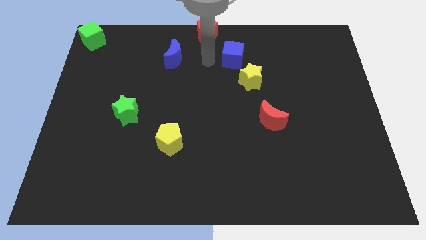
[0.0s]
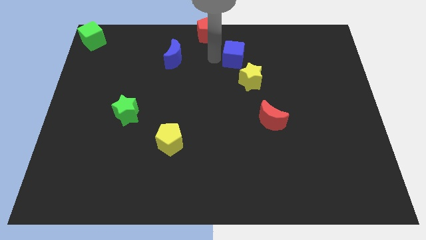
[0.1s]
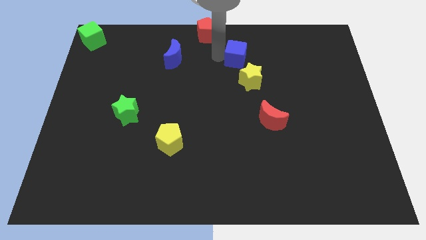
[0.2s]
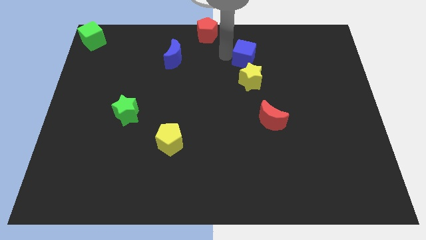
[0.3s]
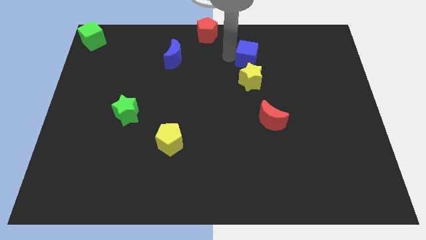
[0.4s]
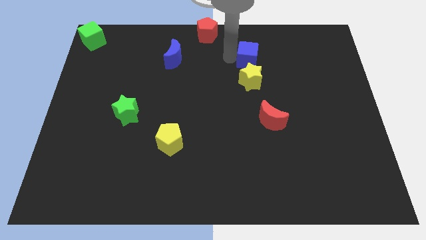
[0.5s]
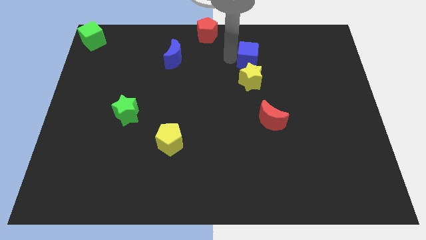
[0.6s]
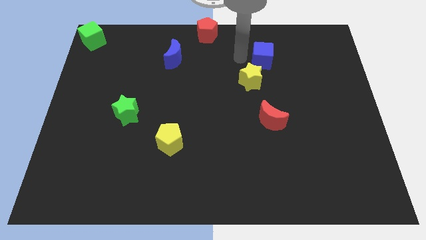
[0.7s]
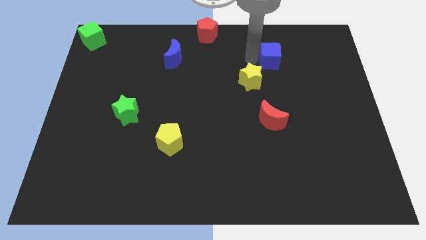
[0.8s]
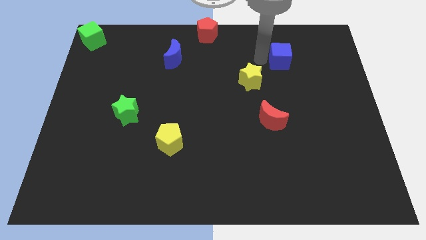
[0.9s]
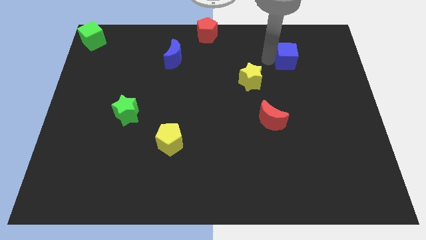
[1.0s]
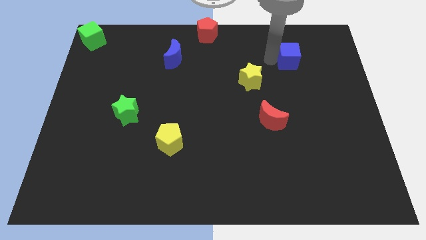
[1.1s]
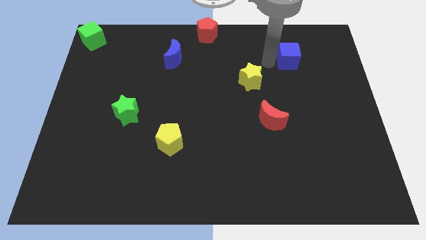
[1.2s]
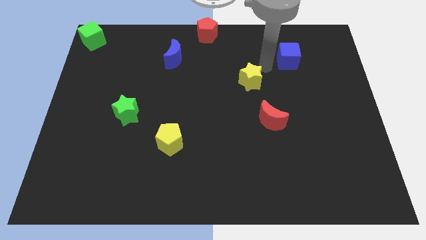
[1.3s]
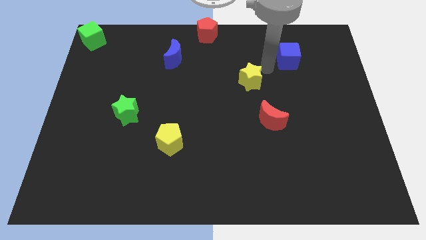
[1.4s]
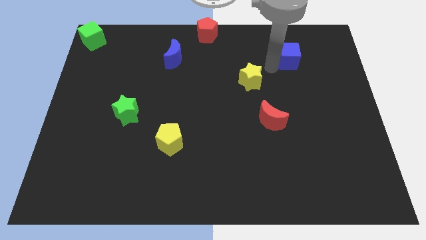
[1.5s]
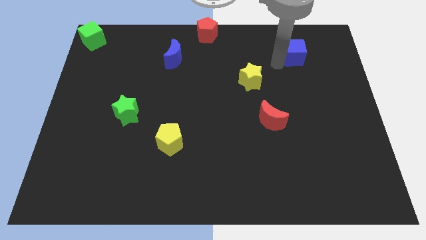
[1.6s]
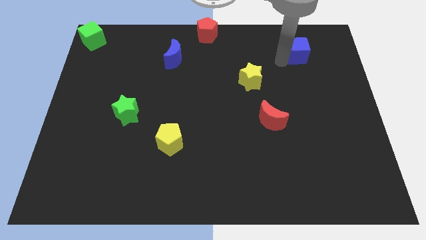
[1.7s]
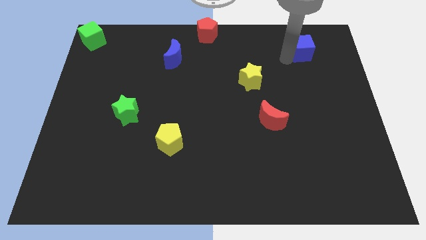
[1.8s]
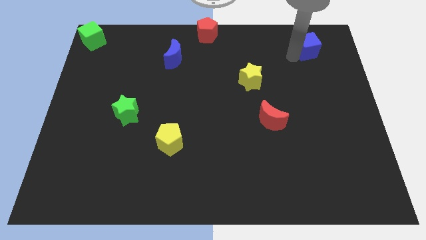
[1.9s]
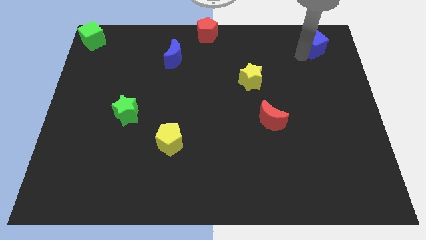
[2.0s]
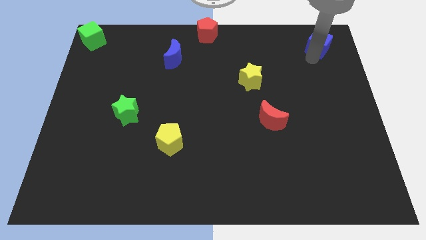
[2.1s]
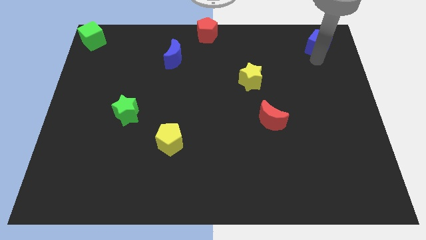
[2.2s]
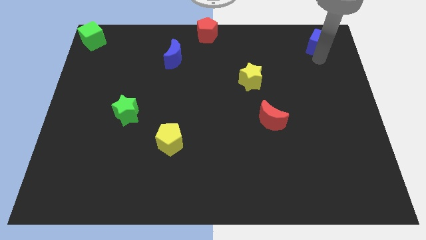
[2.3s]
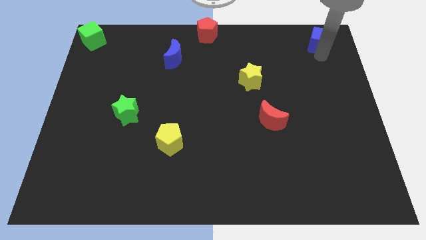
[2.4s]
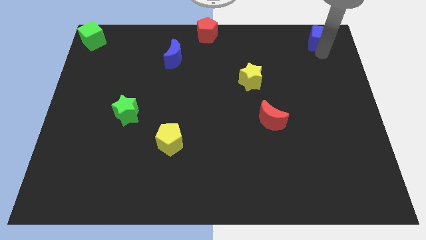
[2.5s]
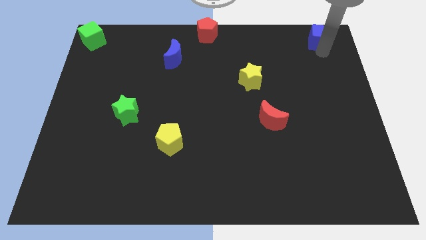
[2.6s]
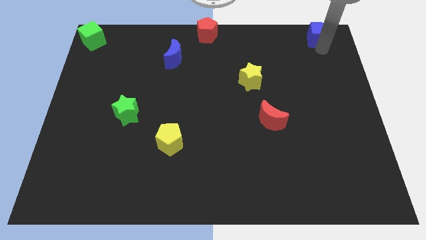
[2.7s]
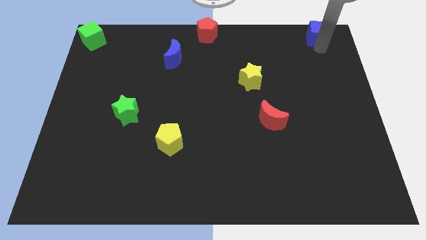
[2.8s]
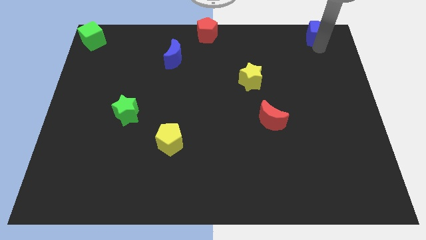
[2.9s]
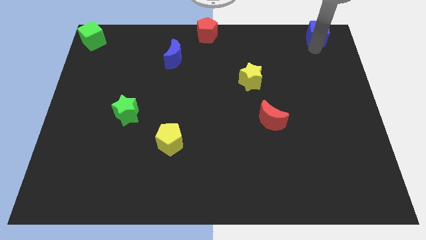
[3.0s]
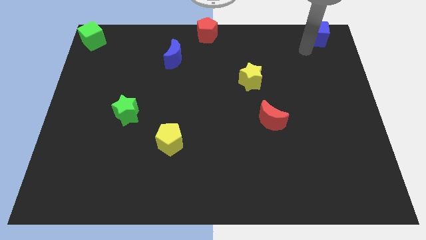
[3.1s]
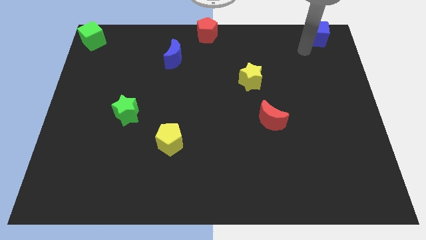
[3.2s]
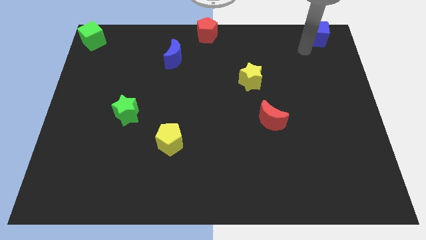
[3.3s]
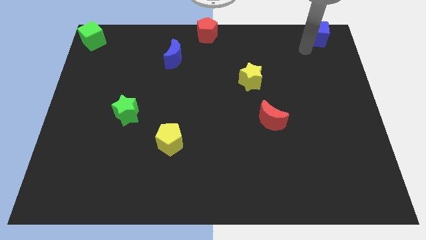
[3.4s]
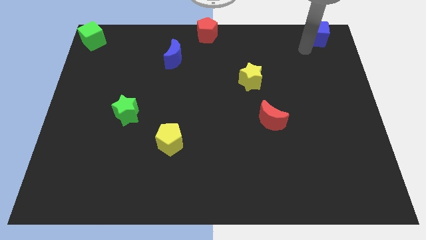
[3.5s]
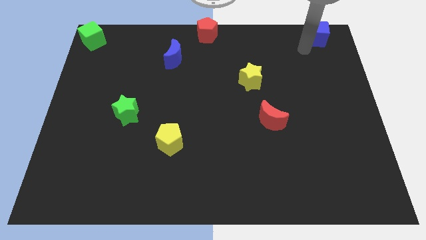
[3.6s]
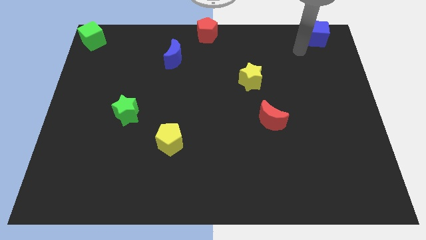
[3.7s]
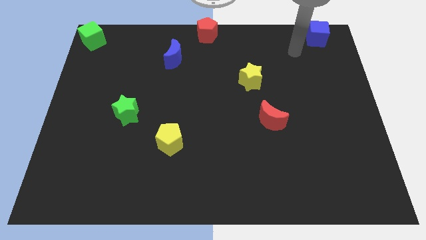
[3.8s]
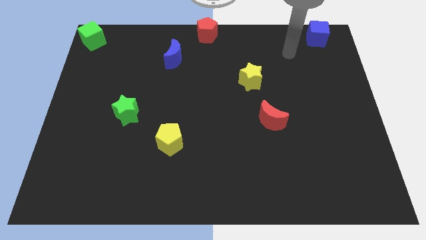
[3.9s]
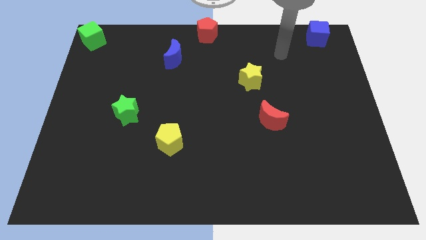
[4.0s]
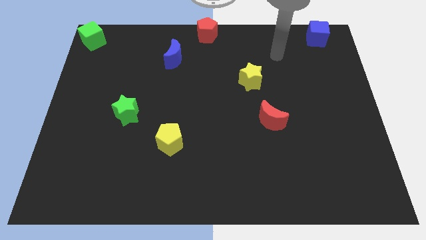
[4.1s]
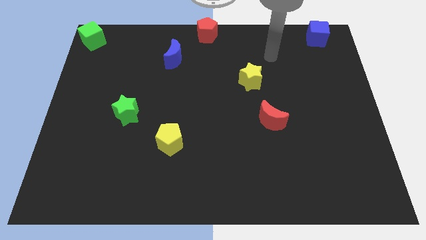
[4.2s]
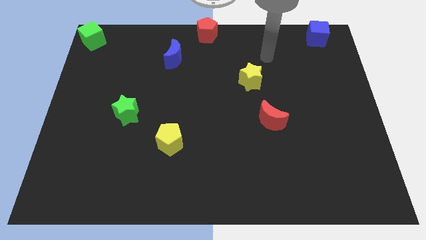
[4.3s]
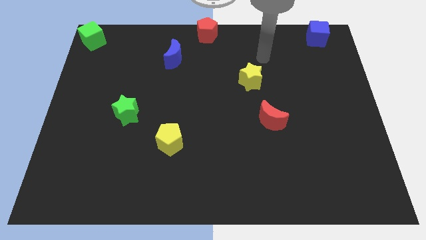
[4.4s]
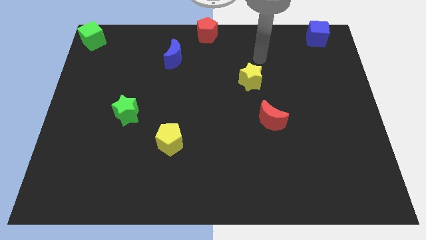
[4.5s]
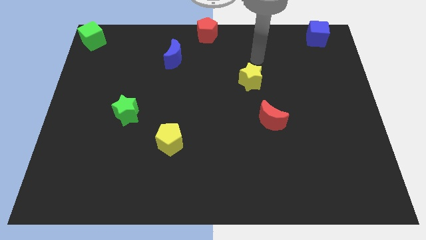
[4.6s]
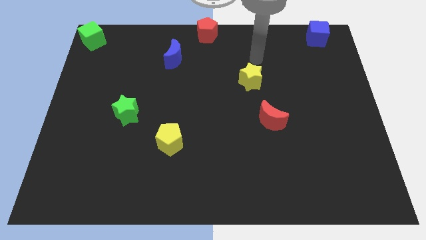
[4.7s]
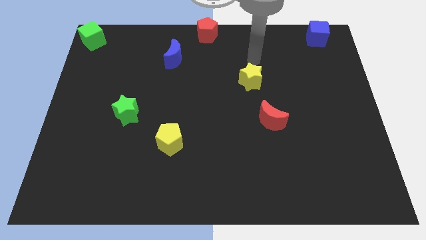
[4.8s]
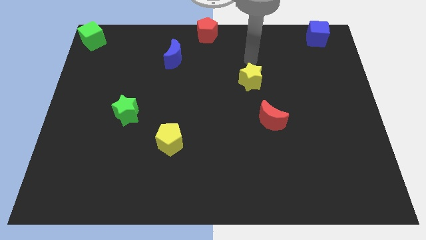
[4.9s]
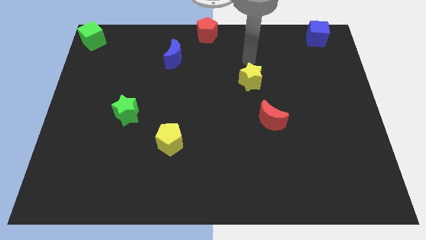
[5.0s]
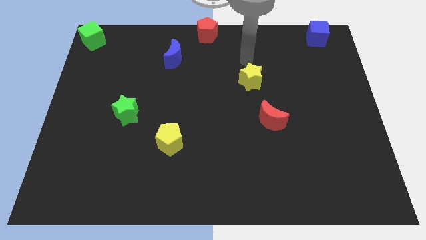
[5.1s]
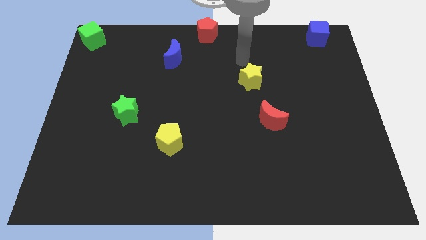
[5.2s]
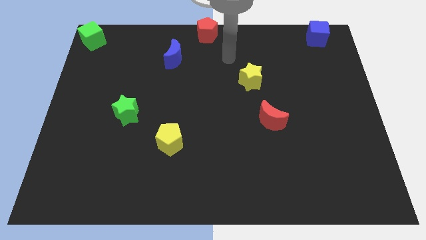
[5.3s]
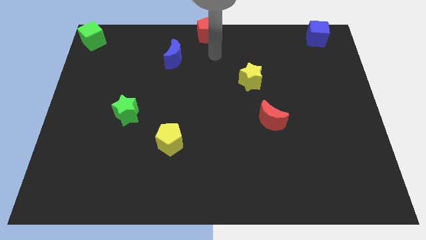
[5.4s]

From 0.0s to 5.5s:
push the blue cube to the top right corner of the board

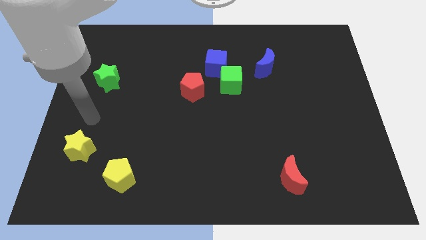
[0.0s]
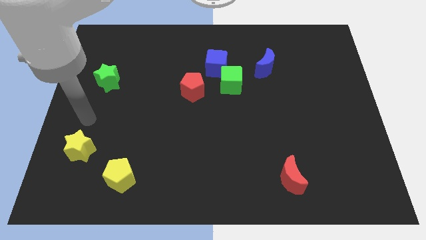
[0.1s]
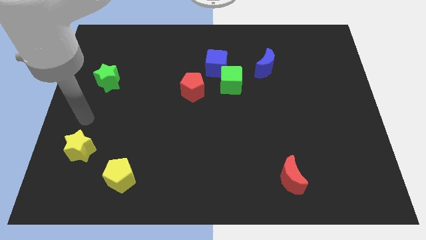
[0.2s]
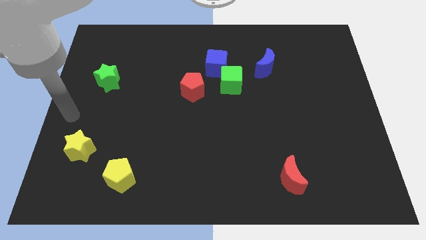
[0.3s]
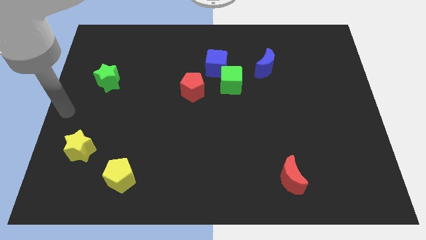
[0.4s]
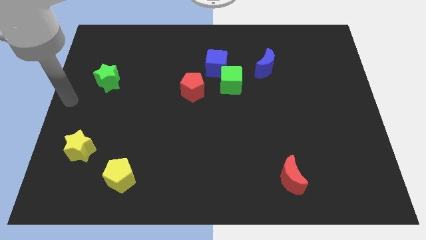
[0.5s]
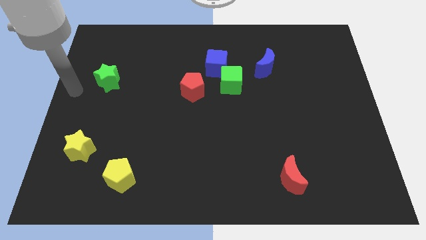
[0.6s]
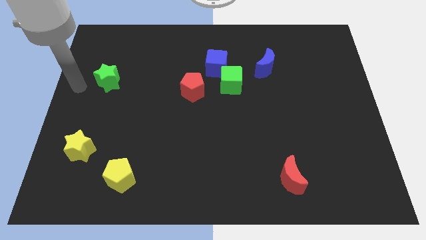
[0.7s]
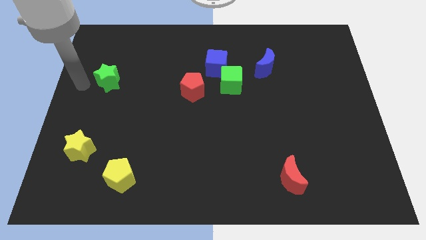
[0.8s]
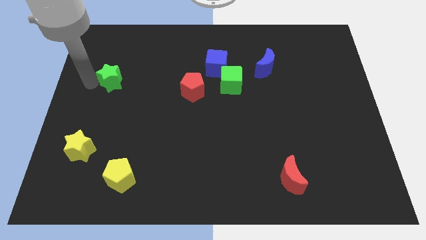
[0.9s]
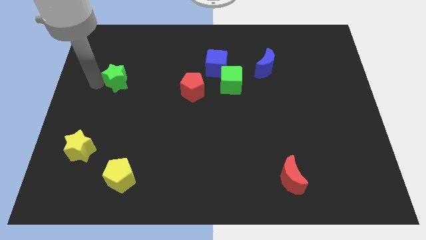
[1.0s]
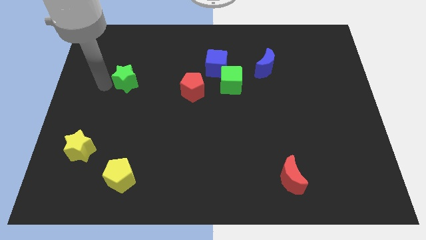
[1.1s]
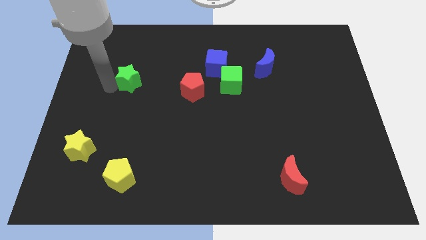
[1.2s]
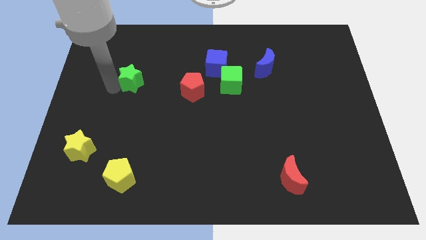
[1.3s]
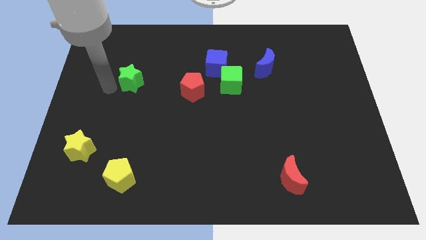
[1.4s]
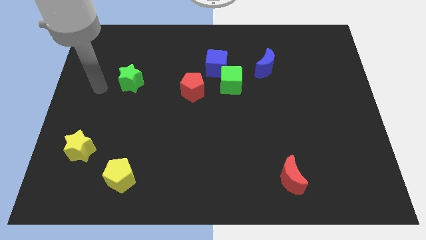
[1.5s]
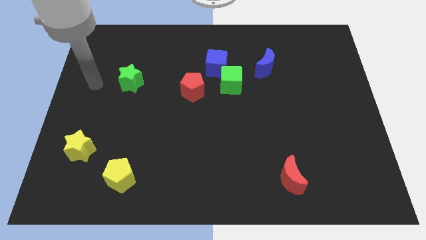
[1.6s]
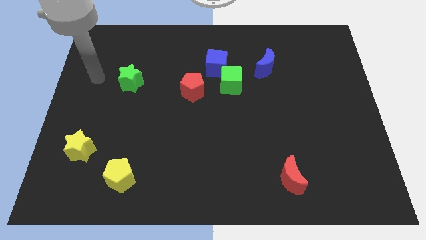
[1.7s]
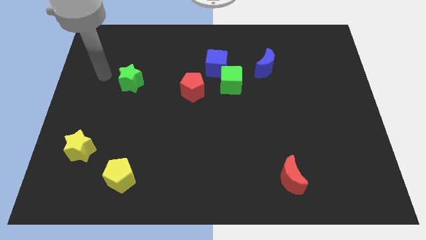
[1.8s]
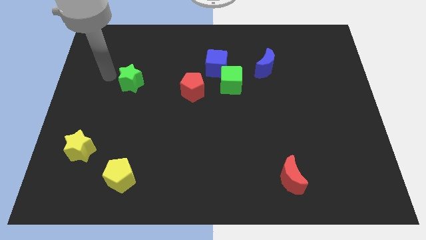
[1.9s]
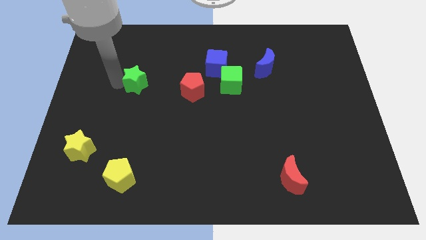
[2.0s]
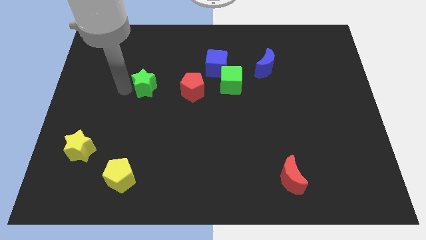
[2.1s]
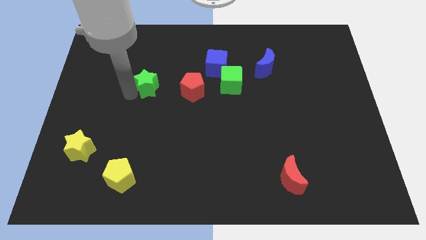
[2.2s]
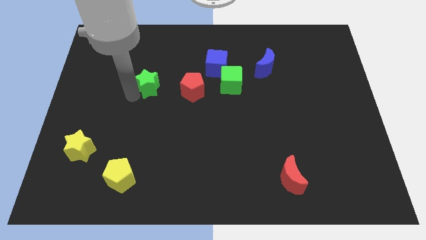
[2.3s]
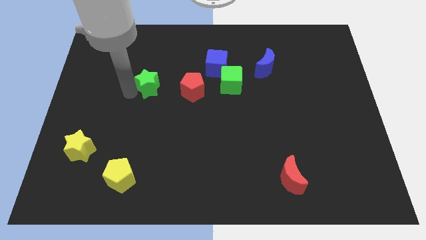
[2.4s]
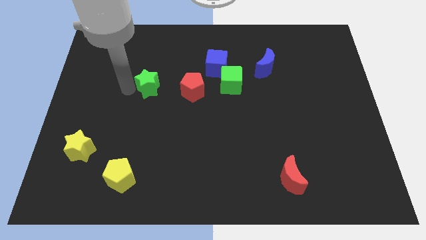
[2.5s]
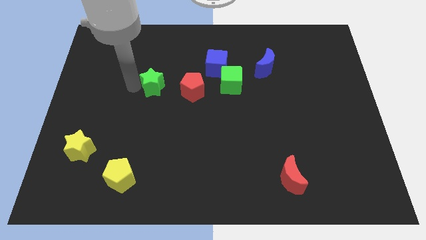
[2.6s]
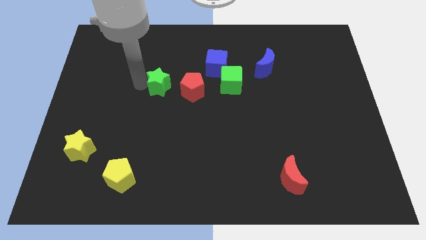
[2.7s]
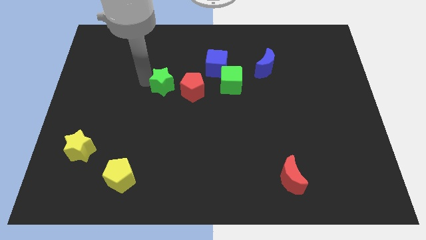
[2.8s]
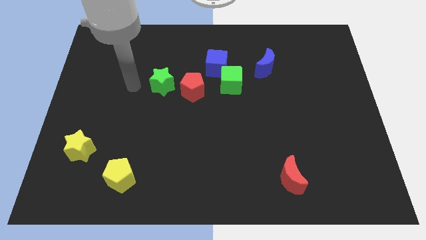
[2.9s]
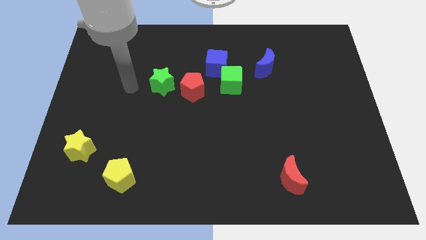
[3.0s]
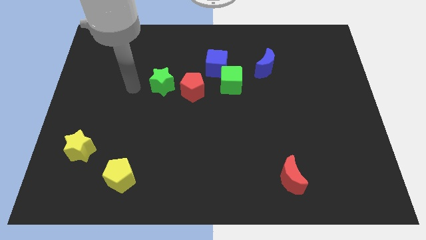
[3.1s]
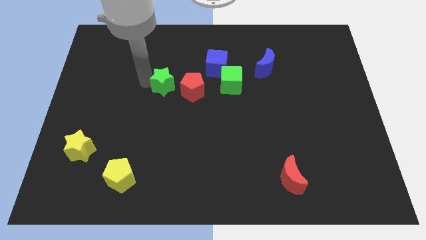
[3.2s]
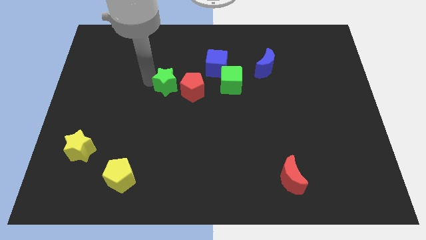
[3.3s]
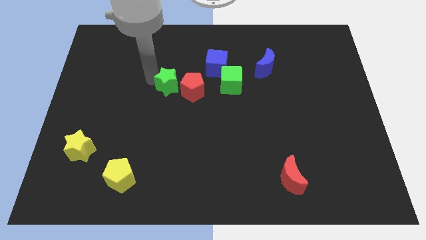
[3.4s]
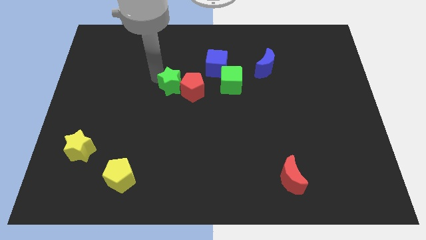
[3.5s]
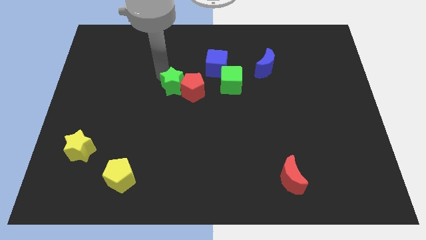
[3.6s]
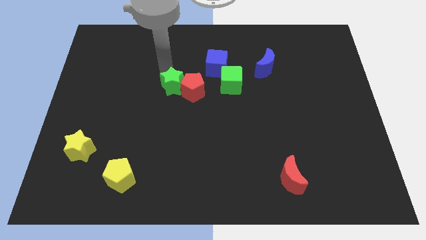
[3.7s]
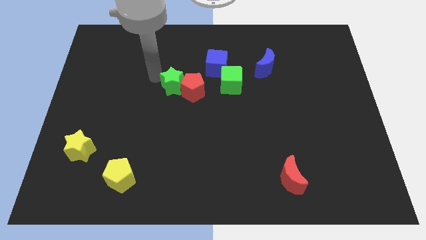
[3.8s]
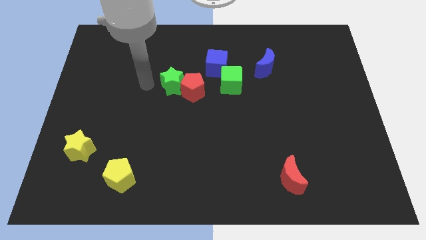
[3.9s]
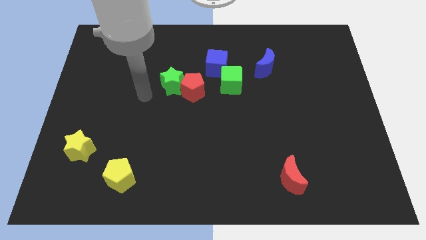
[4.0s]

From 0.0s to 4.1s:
add green star into red pentagon
